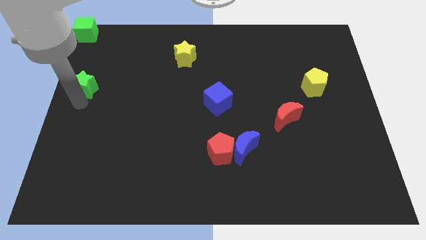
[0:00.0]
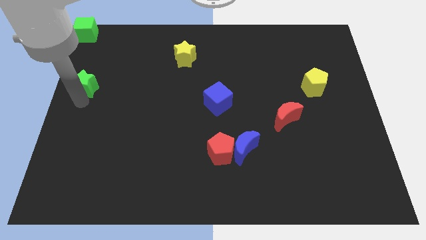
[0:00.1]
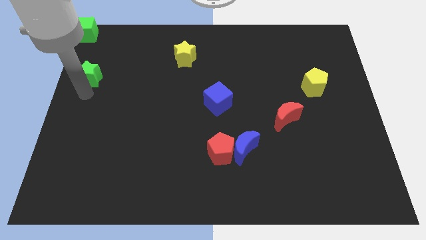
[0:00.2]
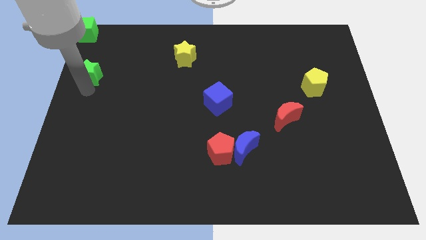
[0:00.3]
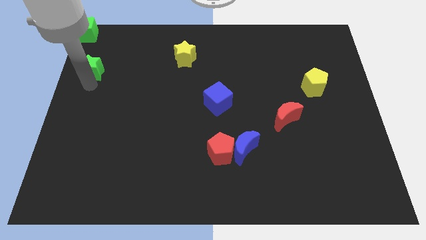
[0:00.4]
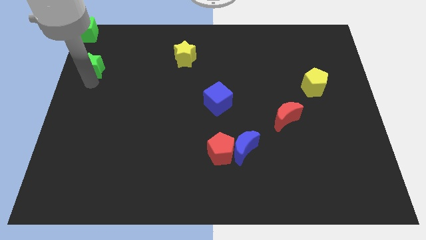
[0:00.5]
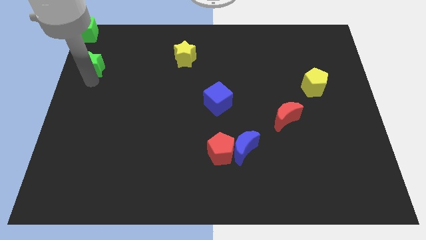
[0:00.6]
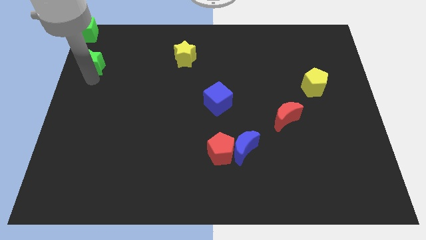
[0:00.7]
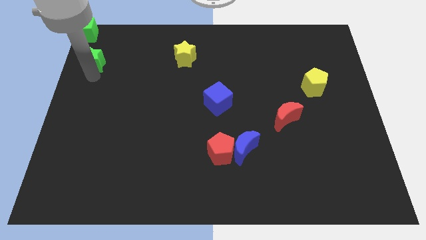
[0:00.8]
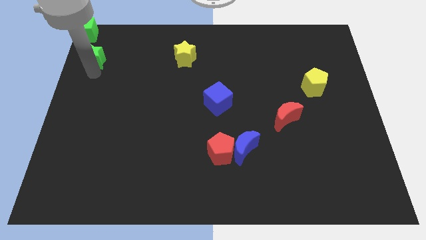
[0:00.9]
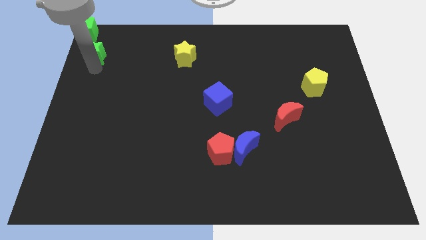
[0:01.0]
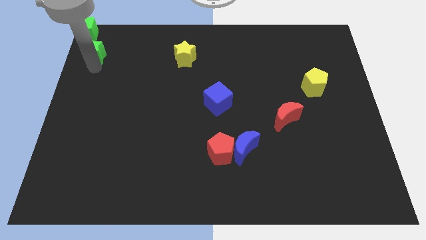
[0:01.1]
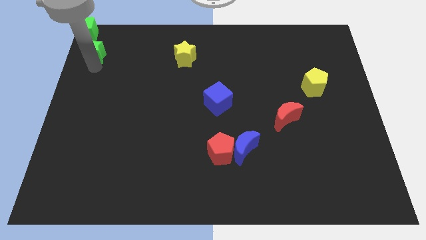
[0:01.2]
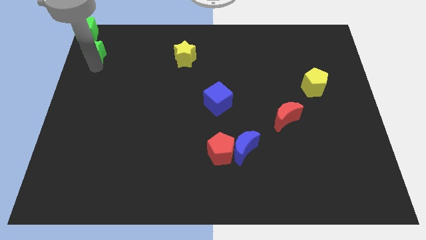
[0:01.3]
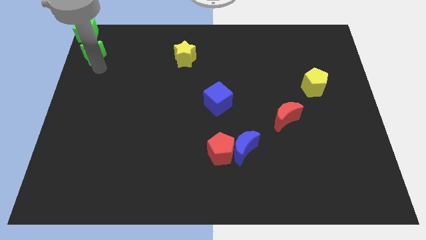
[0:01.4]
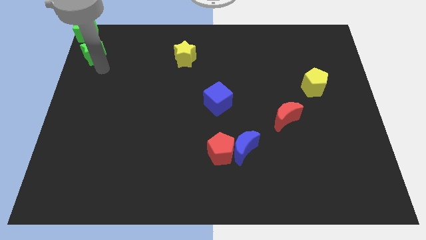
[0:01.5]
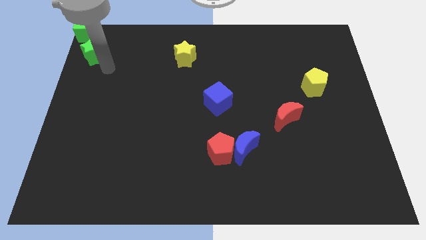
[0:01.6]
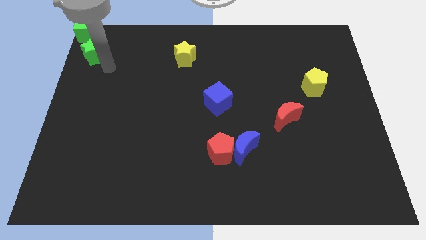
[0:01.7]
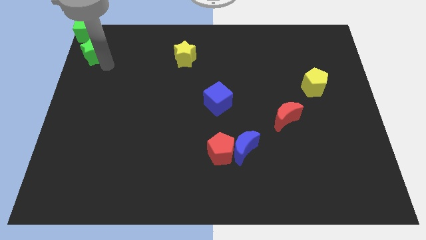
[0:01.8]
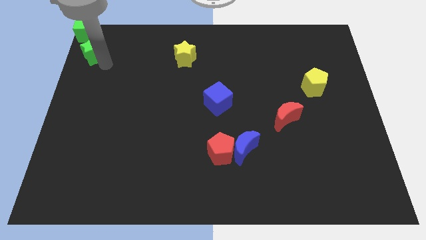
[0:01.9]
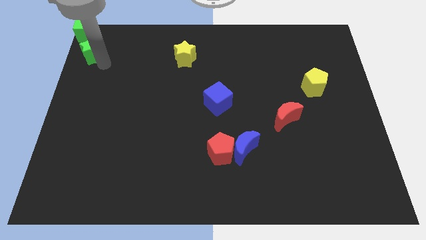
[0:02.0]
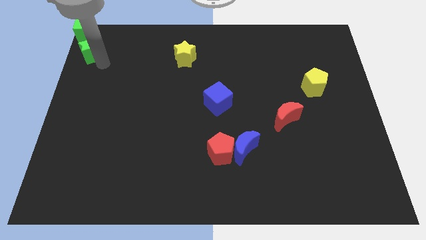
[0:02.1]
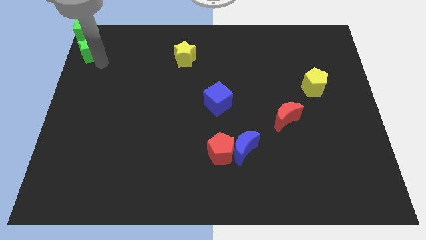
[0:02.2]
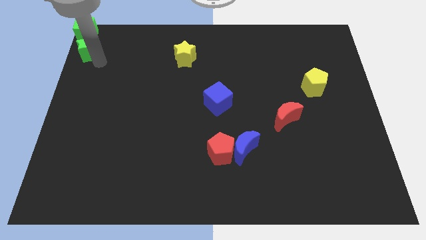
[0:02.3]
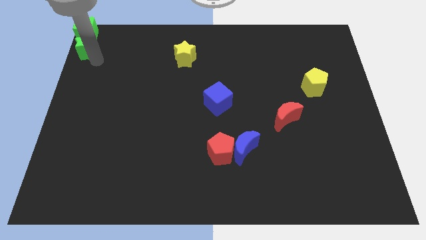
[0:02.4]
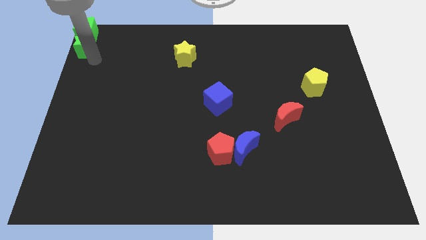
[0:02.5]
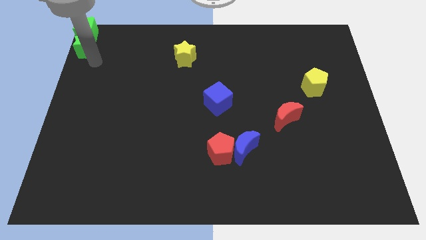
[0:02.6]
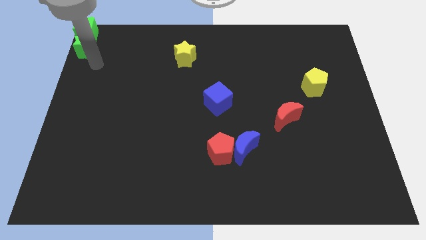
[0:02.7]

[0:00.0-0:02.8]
push the green star to the bottom side of the green cube

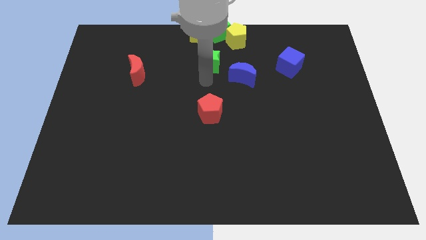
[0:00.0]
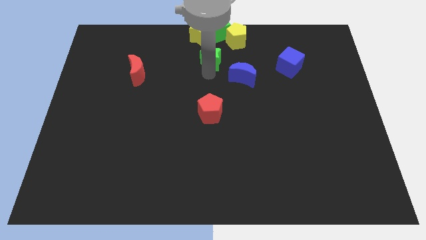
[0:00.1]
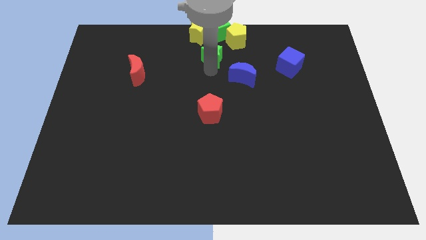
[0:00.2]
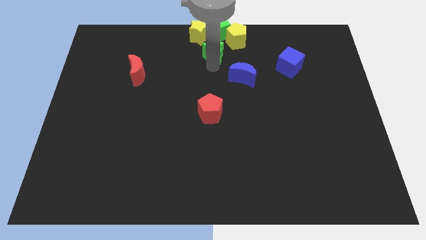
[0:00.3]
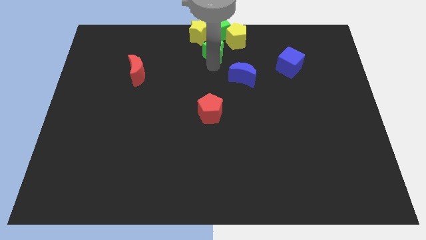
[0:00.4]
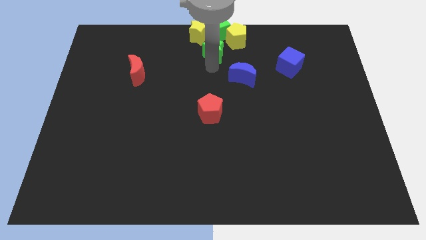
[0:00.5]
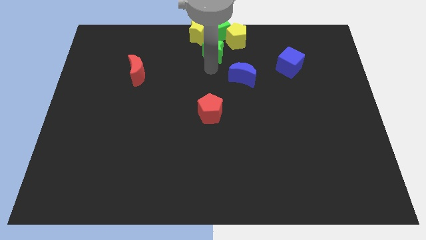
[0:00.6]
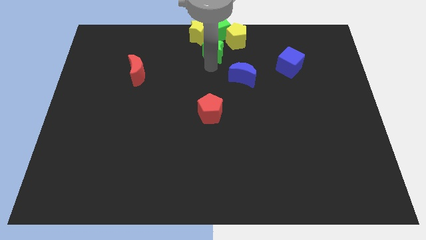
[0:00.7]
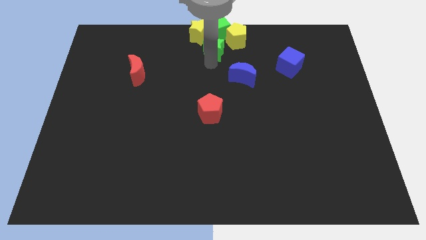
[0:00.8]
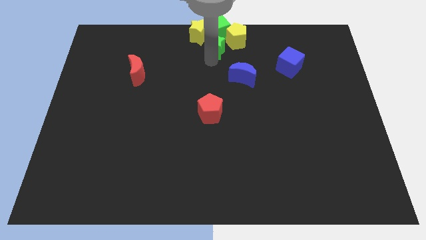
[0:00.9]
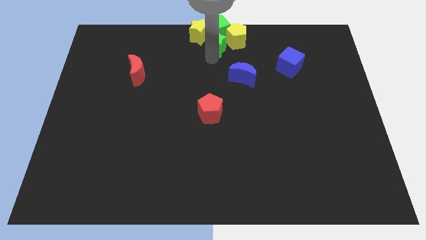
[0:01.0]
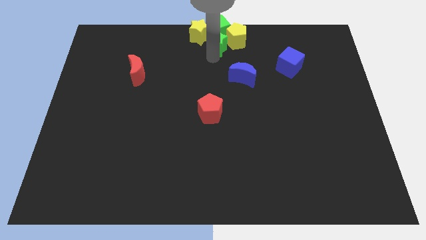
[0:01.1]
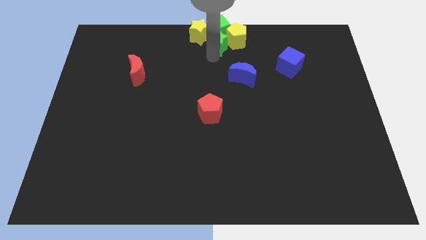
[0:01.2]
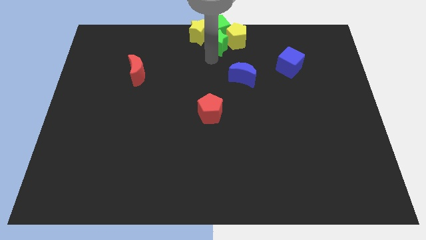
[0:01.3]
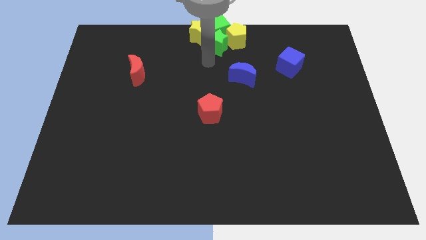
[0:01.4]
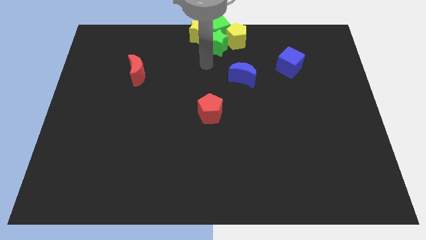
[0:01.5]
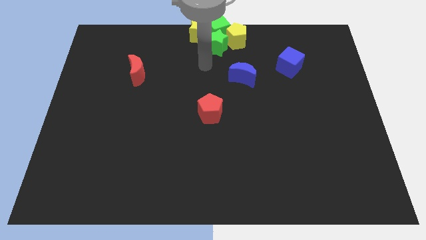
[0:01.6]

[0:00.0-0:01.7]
push the green star into the green cube

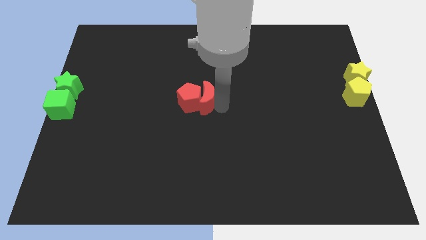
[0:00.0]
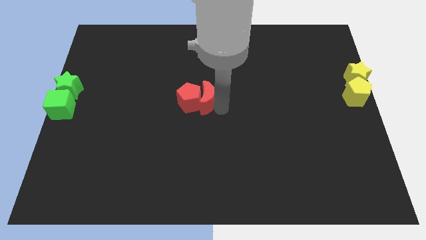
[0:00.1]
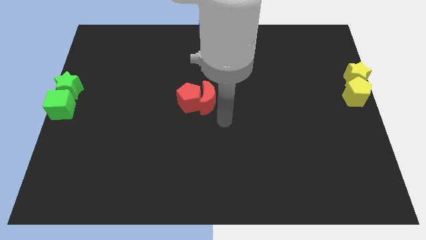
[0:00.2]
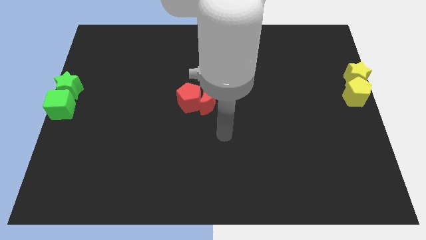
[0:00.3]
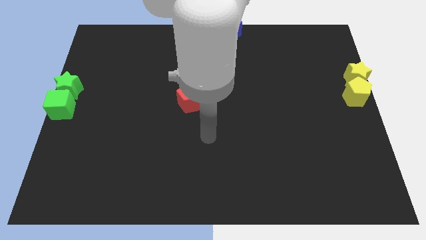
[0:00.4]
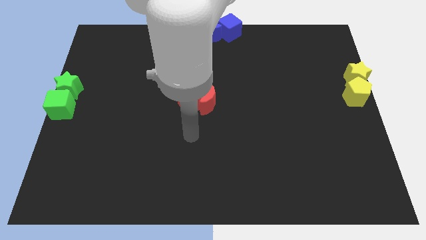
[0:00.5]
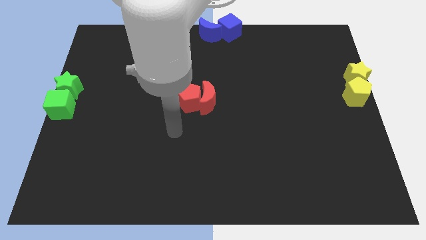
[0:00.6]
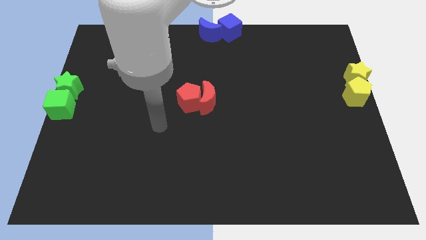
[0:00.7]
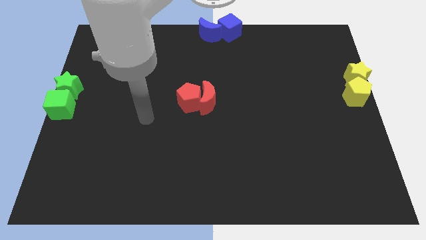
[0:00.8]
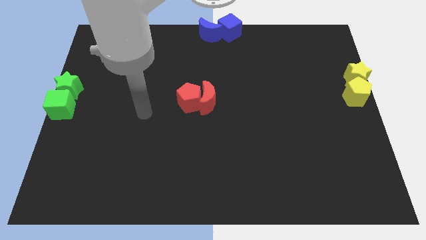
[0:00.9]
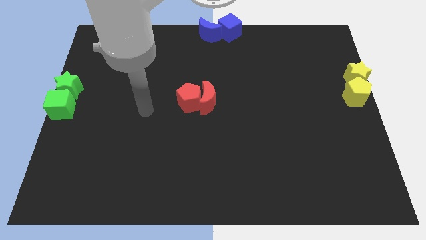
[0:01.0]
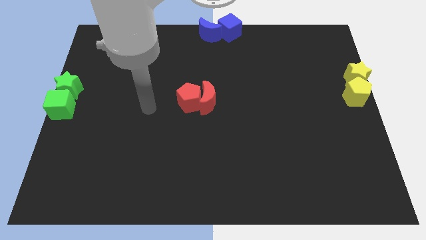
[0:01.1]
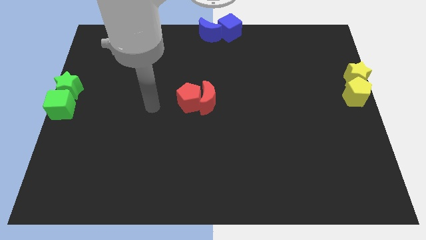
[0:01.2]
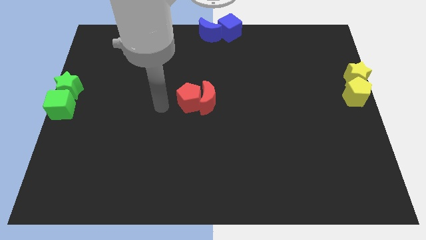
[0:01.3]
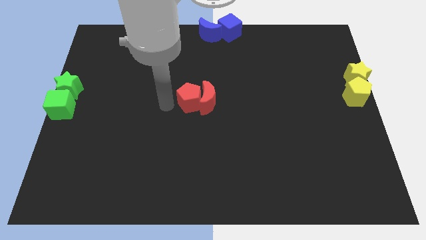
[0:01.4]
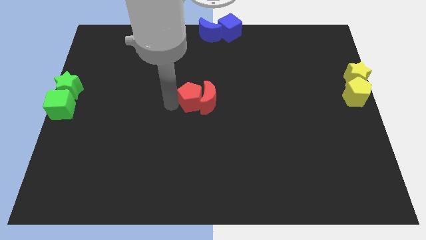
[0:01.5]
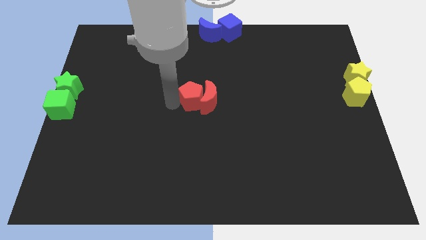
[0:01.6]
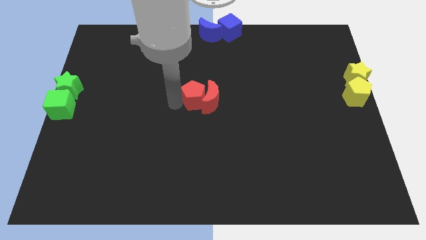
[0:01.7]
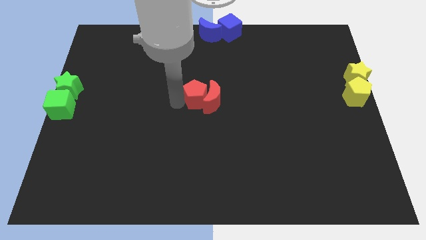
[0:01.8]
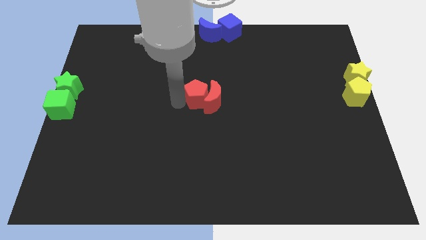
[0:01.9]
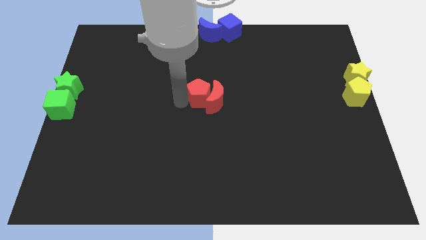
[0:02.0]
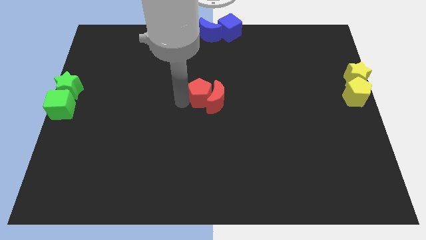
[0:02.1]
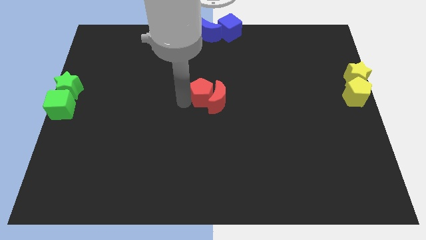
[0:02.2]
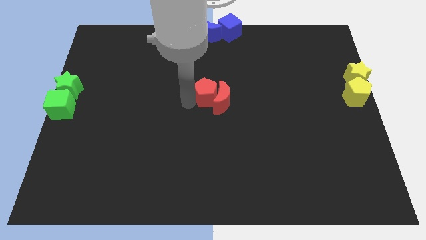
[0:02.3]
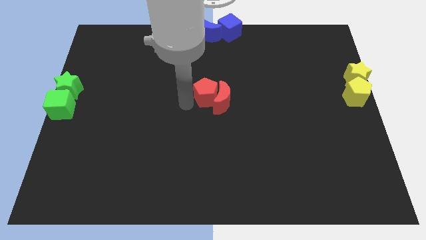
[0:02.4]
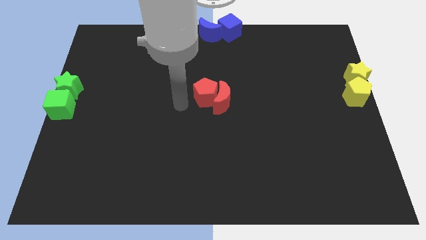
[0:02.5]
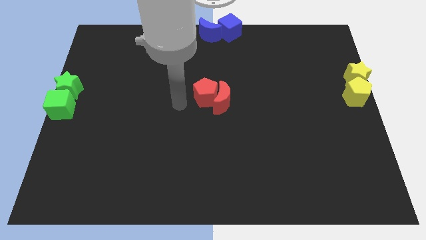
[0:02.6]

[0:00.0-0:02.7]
move red blocks slightly right

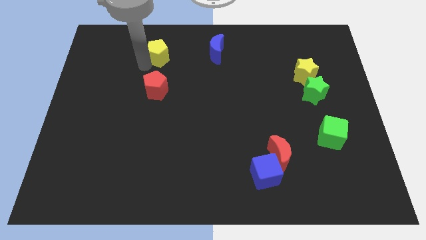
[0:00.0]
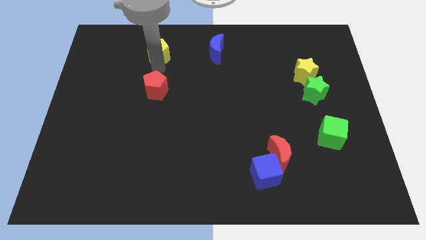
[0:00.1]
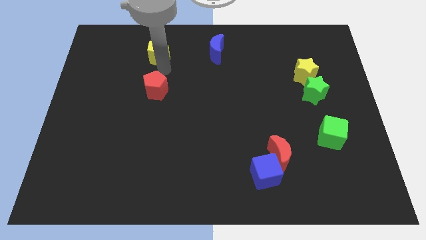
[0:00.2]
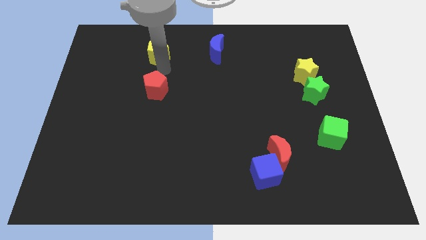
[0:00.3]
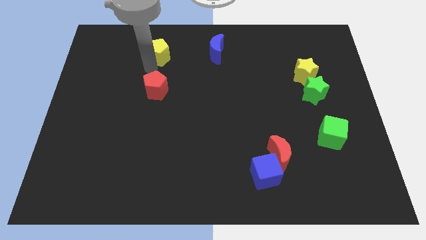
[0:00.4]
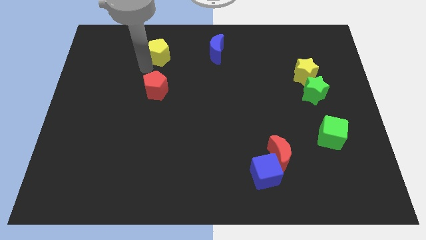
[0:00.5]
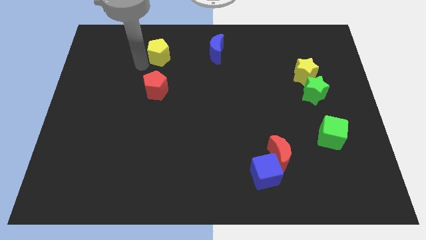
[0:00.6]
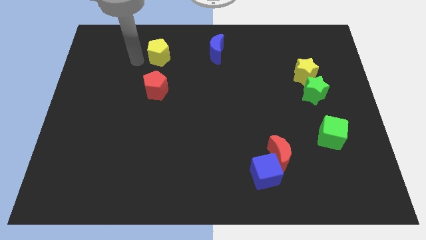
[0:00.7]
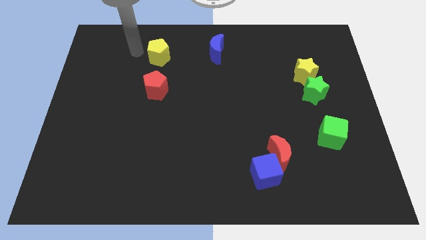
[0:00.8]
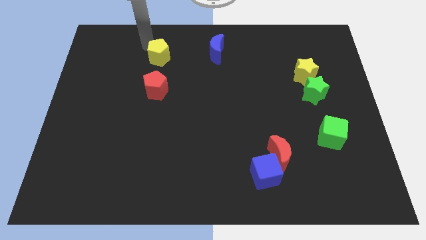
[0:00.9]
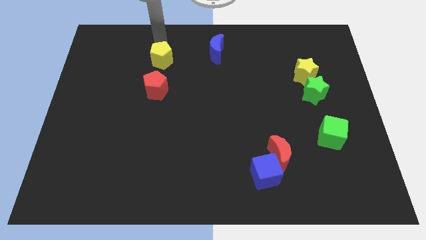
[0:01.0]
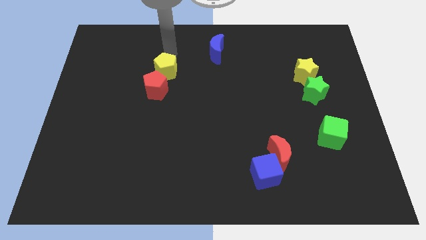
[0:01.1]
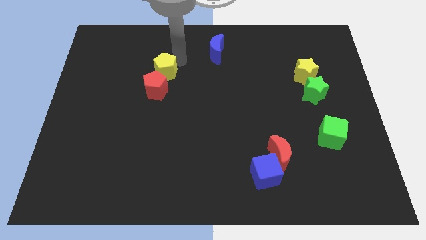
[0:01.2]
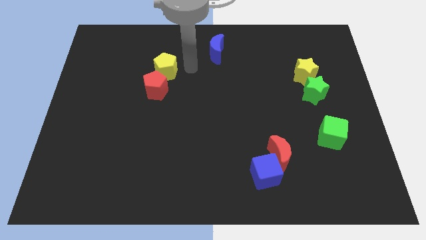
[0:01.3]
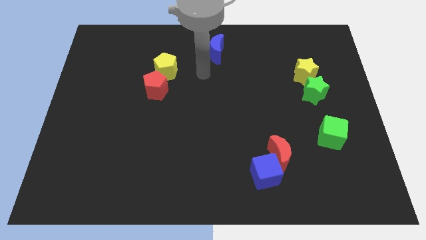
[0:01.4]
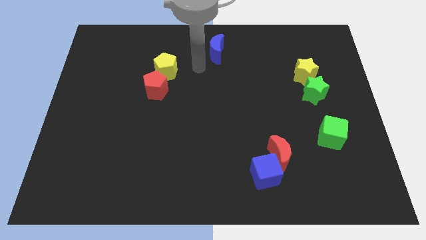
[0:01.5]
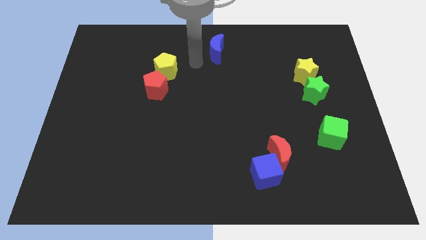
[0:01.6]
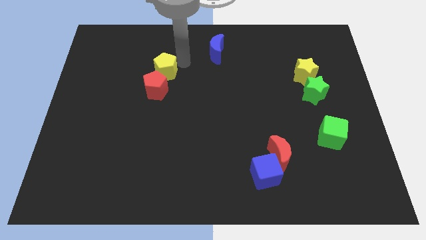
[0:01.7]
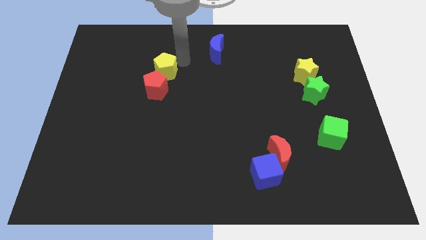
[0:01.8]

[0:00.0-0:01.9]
bring yellow pentagon close to red pentagon

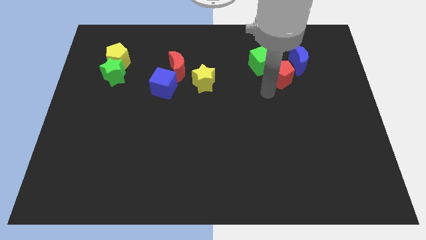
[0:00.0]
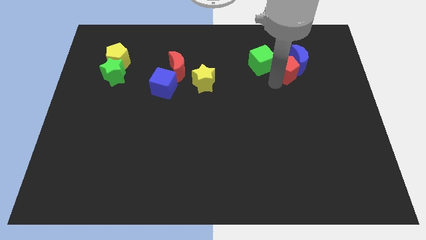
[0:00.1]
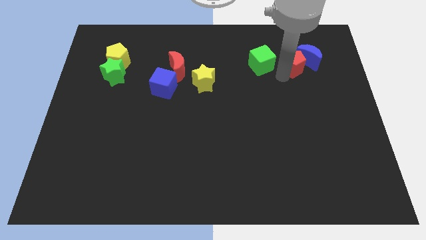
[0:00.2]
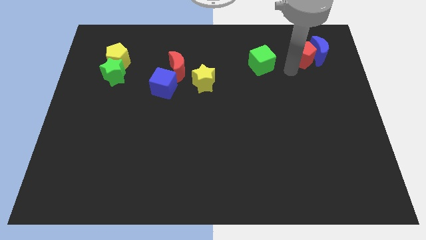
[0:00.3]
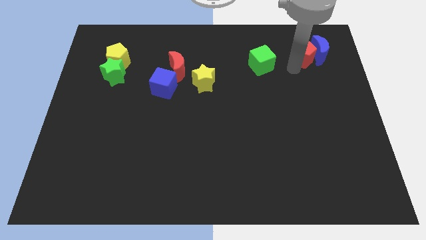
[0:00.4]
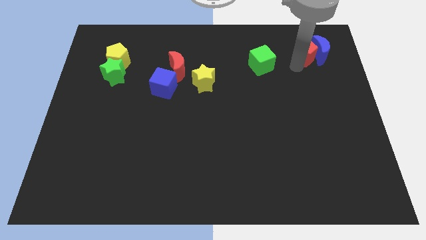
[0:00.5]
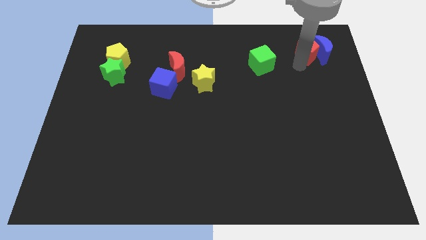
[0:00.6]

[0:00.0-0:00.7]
move the red along with blue block to the top right corner of the board
